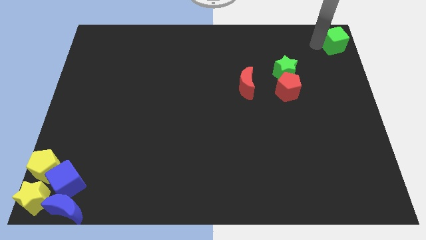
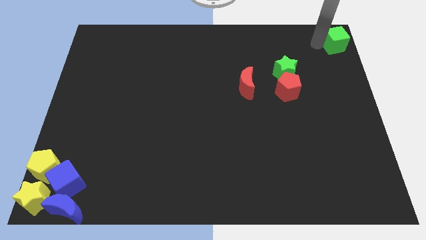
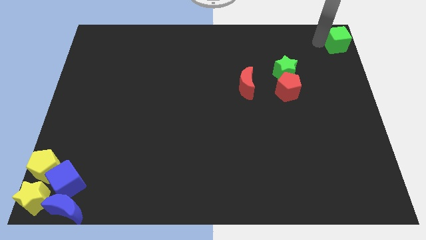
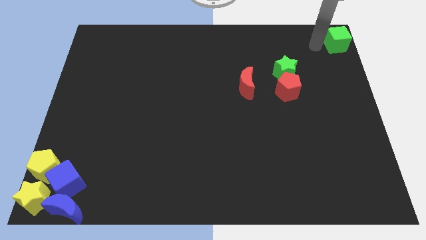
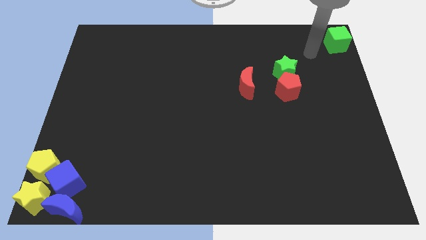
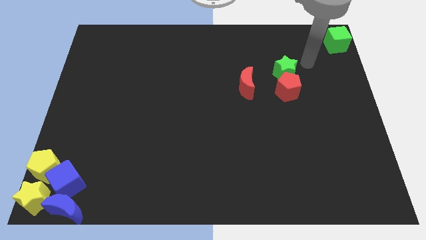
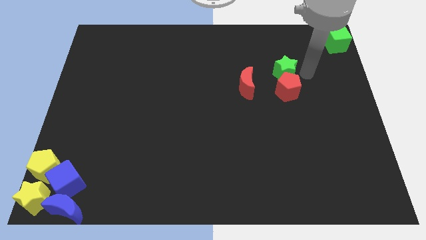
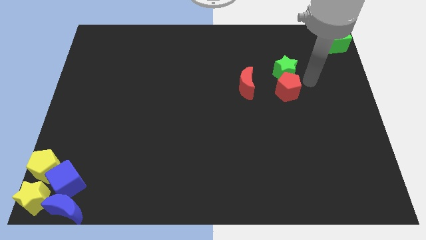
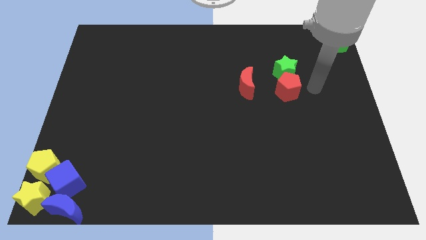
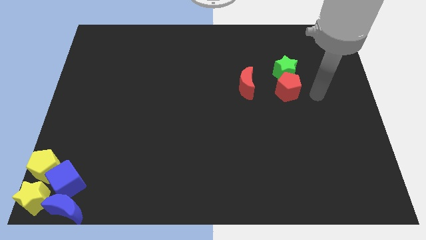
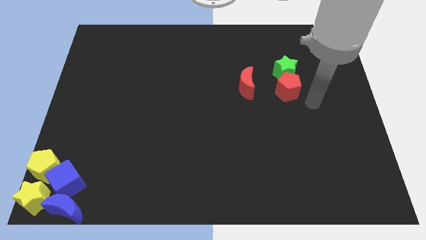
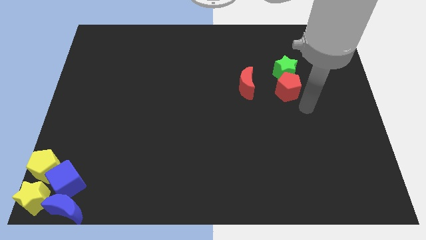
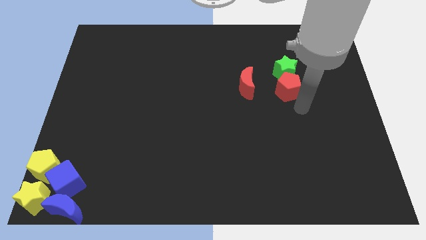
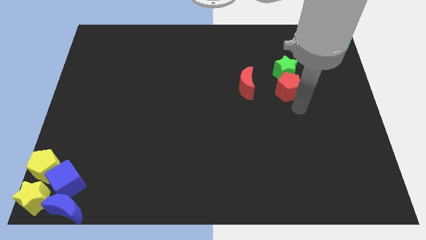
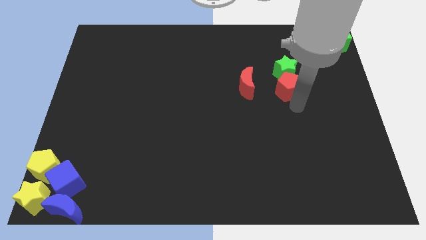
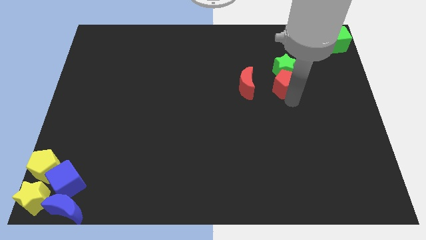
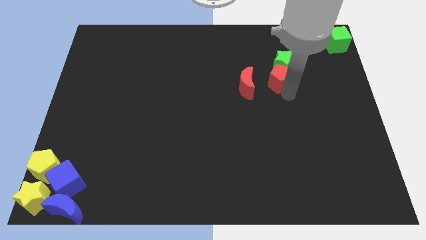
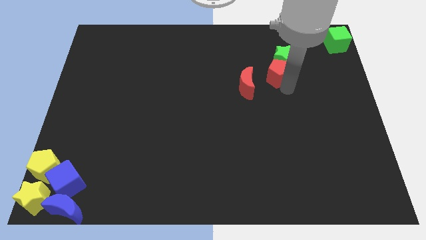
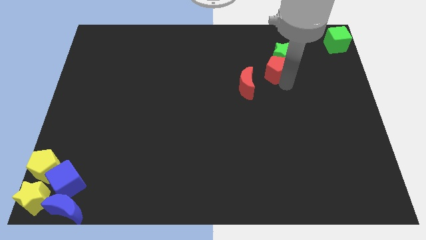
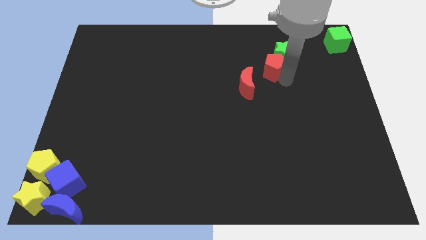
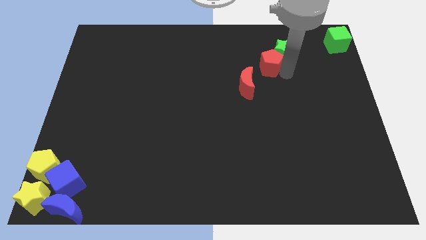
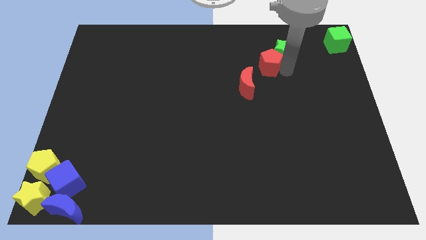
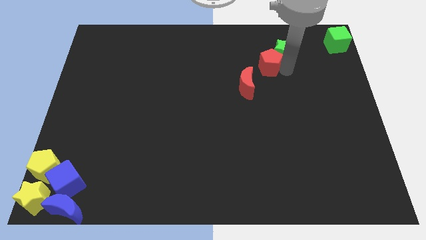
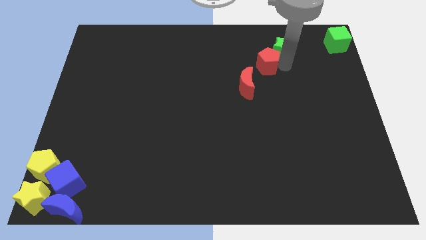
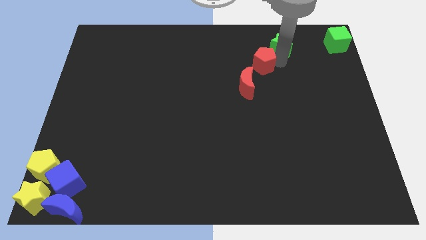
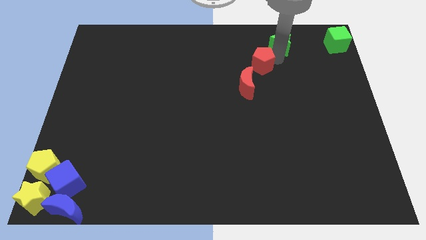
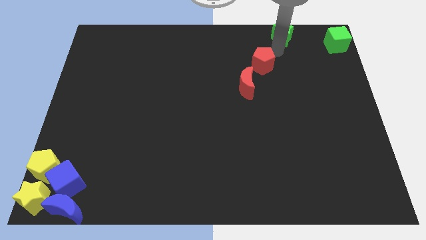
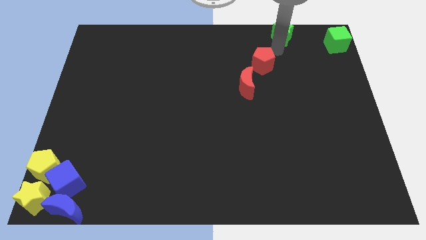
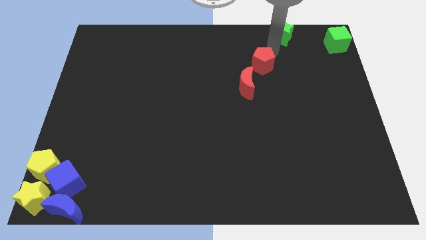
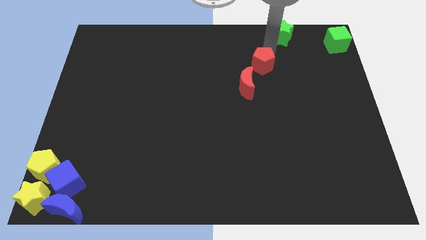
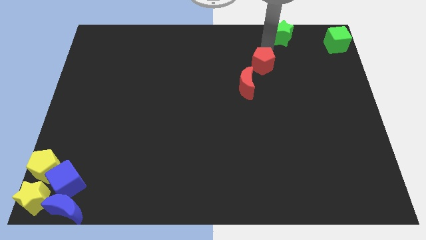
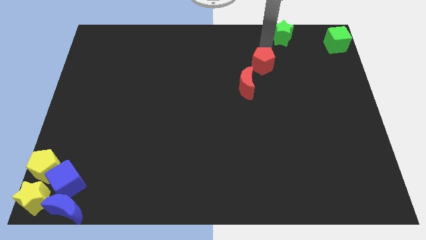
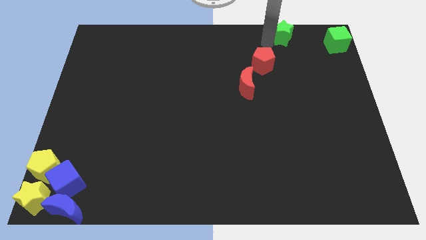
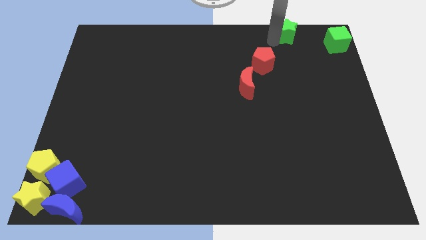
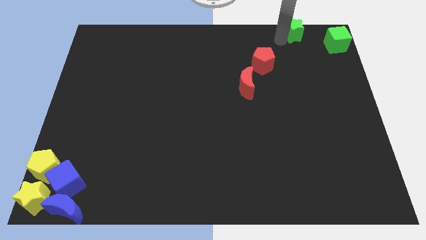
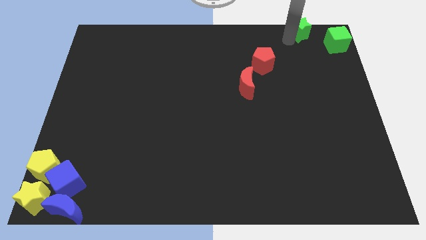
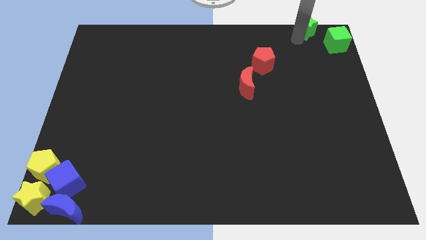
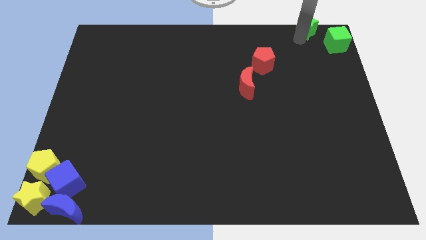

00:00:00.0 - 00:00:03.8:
separate the green star from the red pentagon

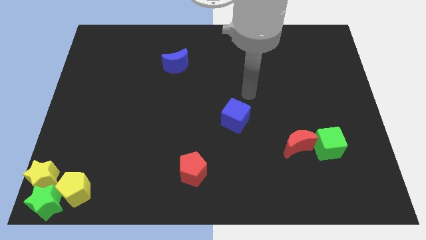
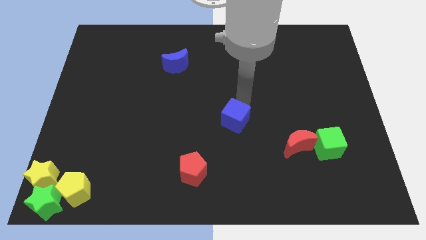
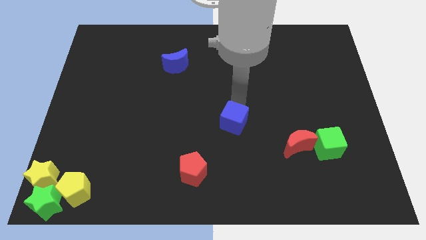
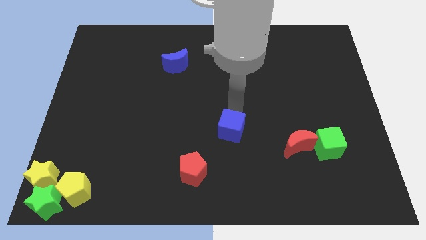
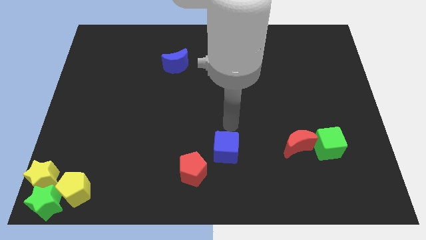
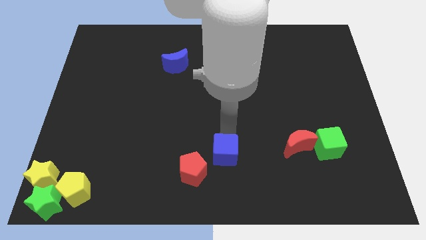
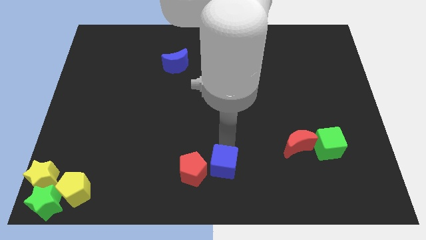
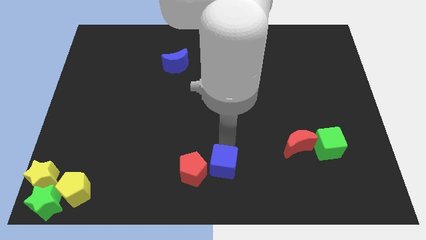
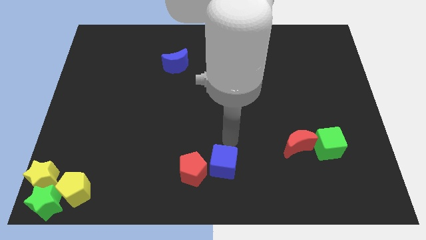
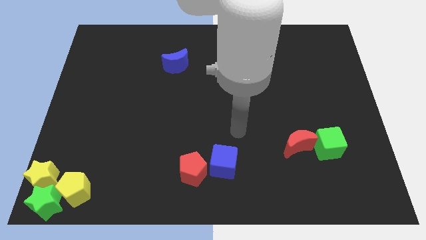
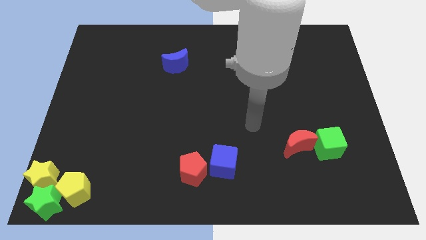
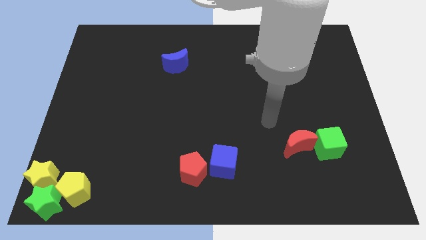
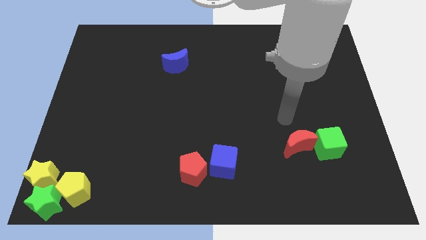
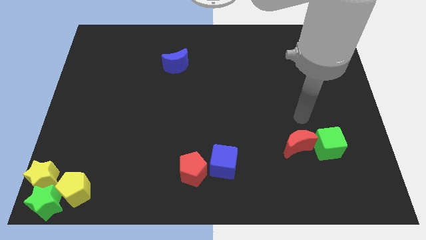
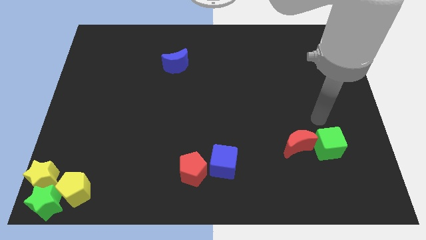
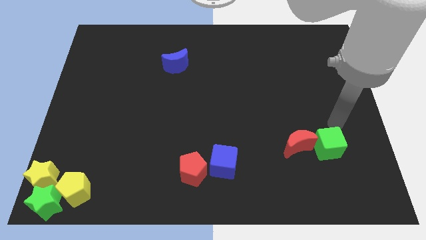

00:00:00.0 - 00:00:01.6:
move the blue cube on the top right side of the red pentagon

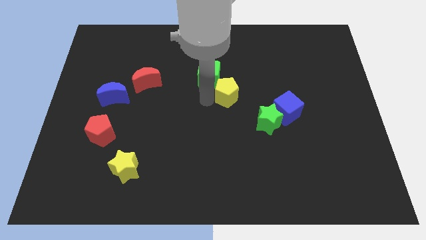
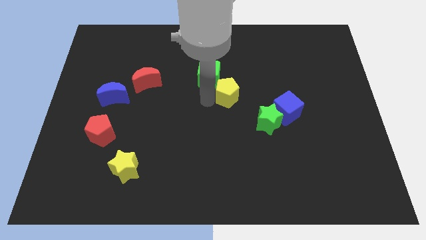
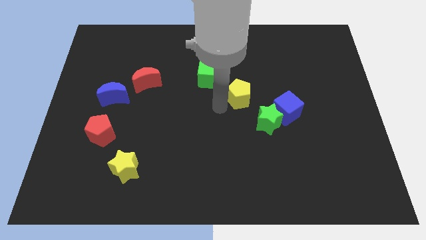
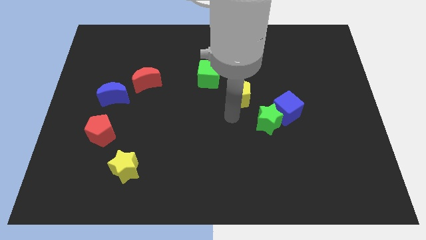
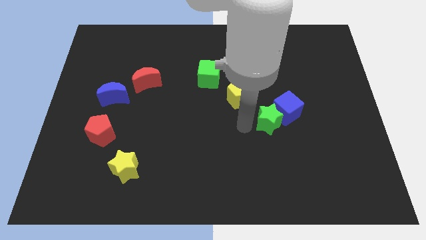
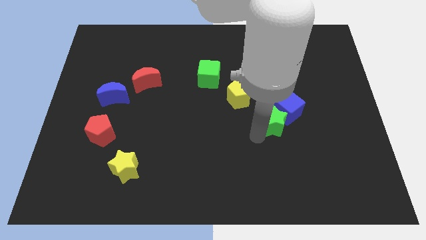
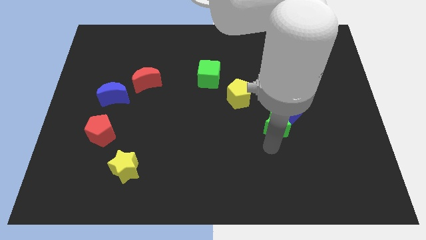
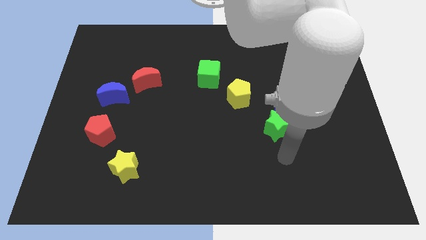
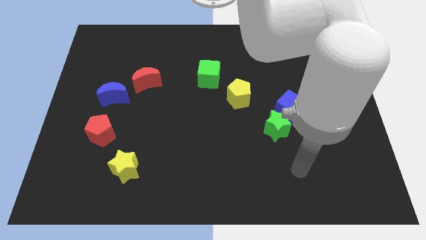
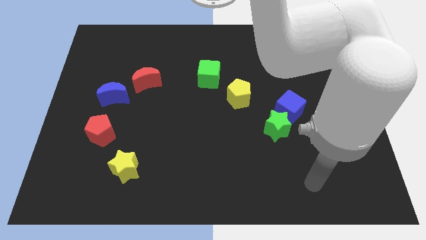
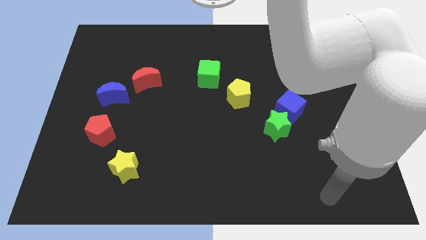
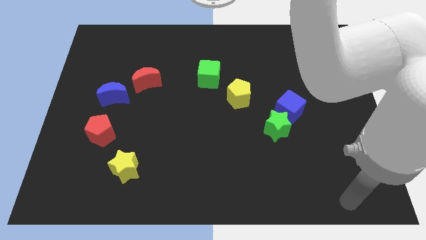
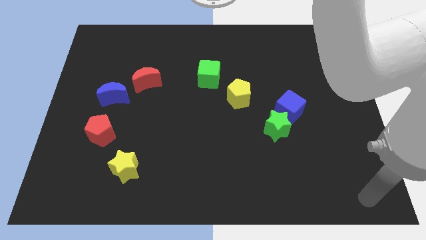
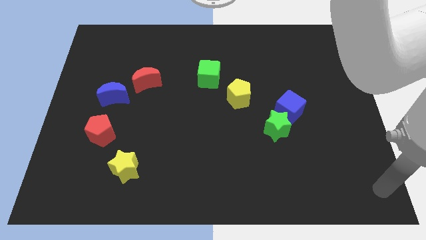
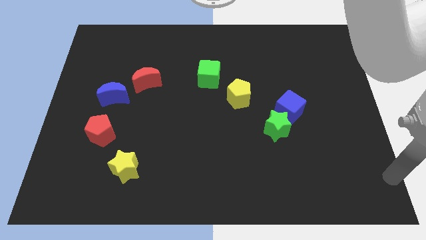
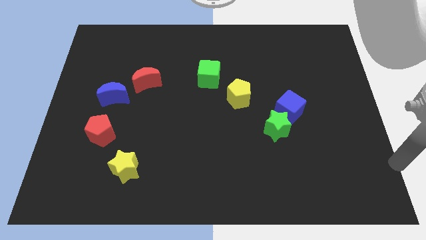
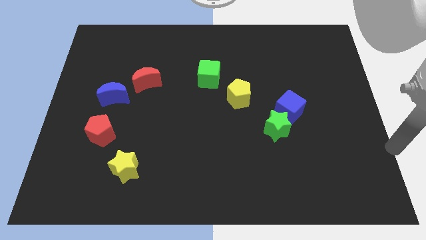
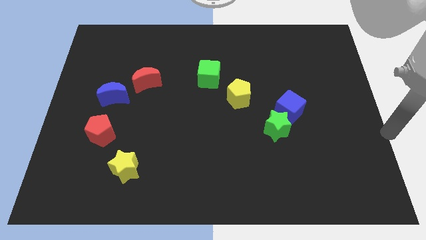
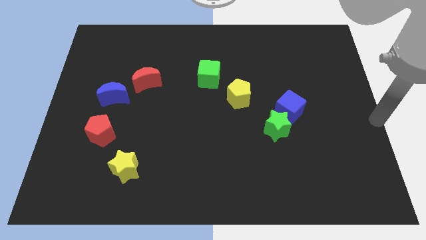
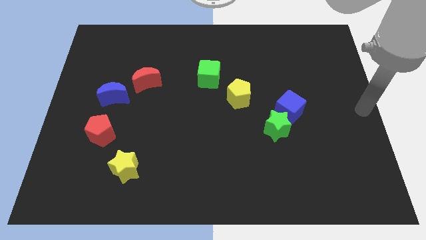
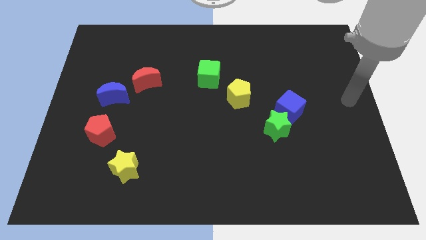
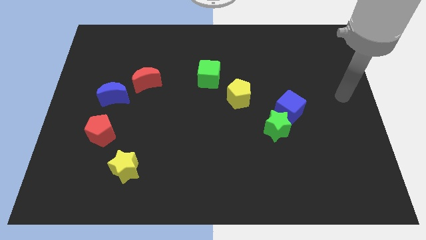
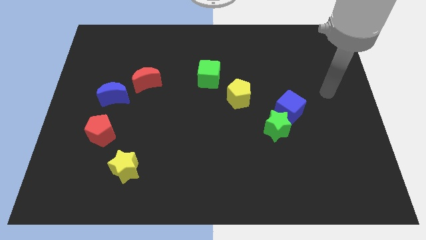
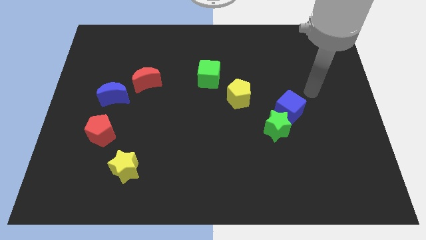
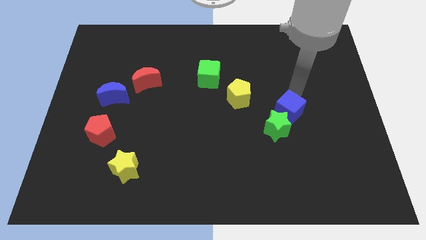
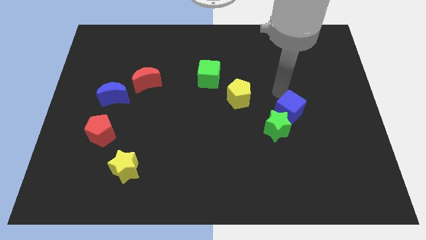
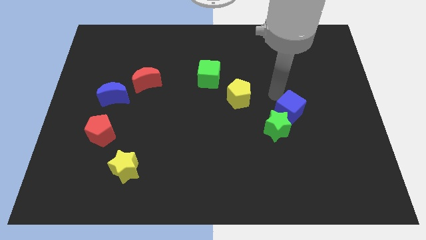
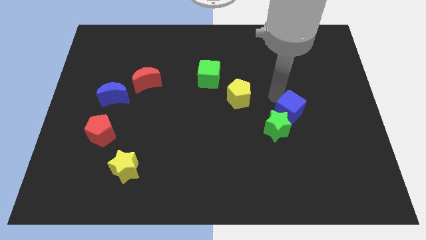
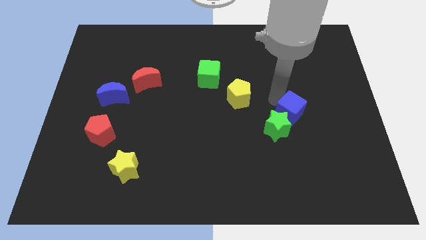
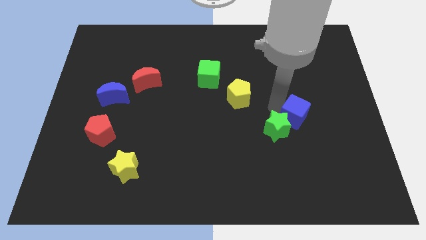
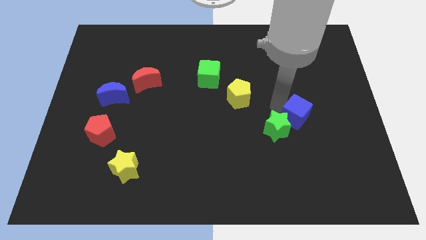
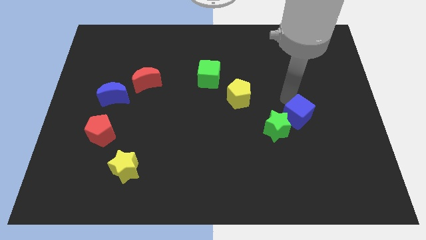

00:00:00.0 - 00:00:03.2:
slightly push the blue cube towards bottom right

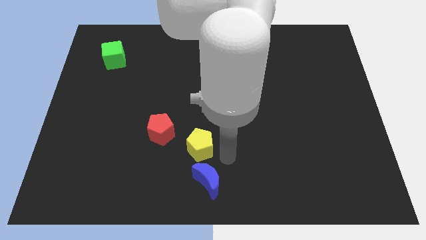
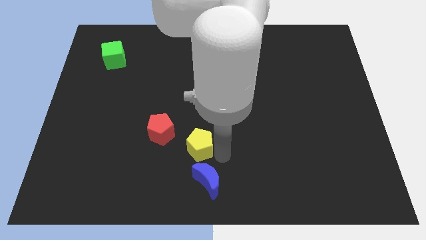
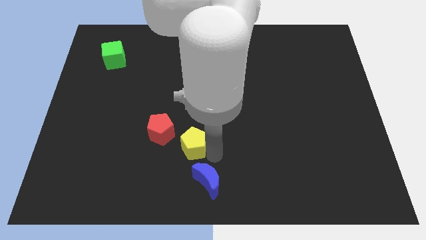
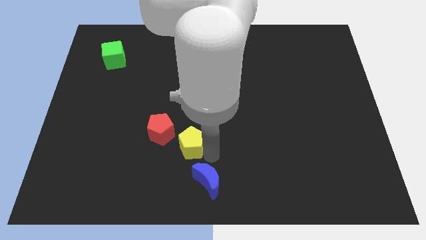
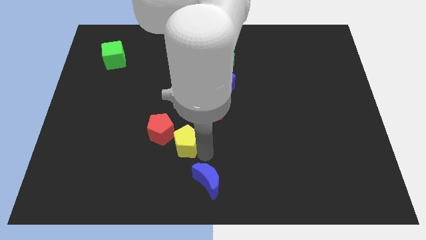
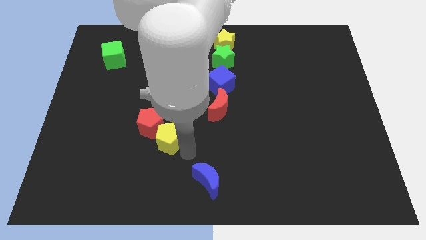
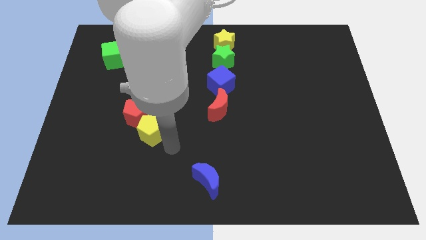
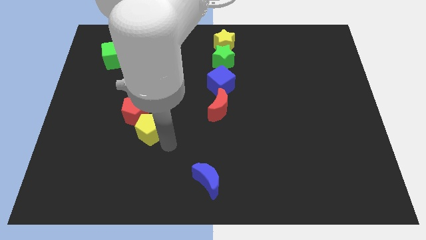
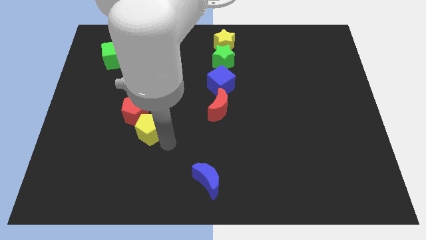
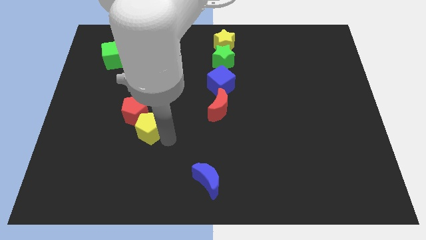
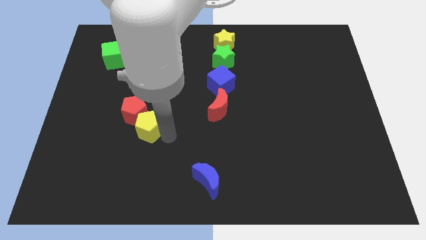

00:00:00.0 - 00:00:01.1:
push the yellow pentagon into the red pentagon
